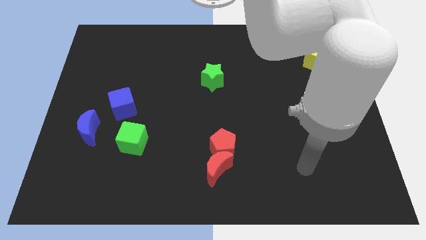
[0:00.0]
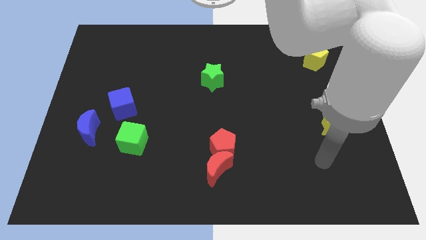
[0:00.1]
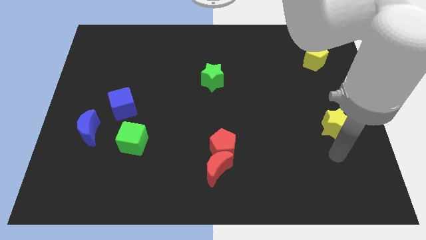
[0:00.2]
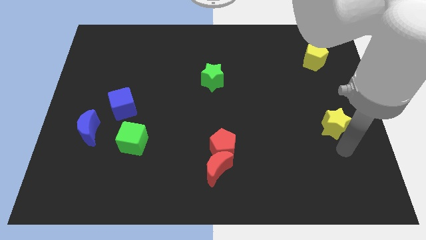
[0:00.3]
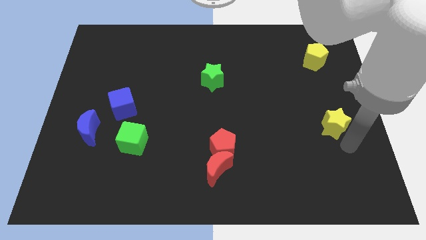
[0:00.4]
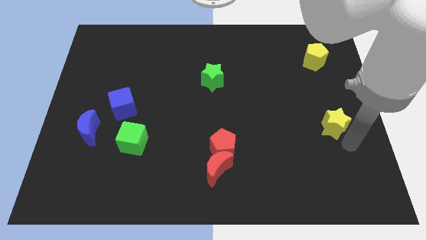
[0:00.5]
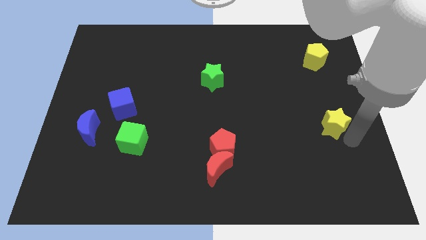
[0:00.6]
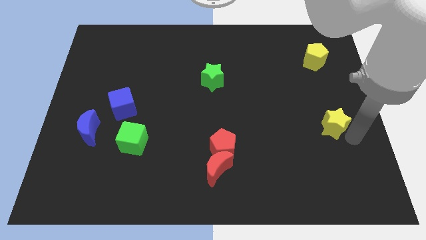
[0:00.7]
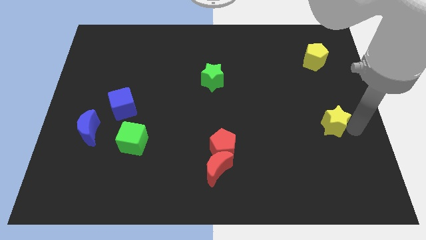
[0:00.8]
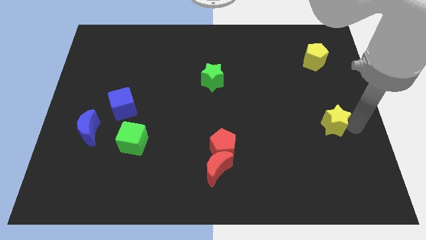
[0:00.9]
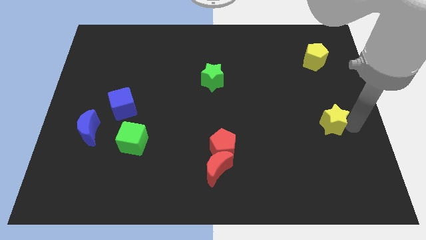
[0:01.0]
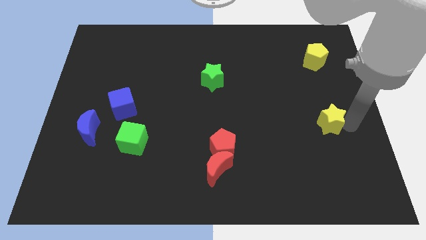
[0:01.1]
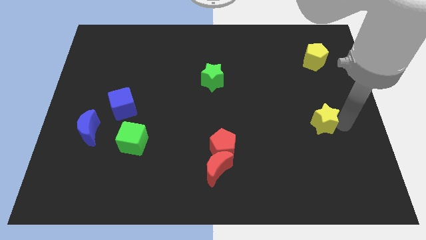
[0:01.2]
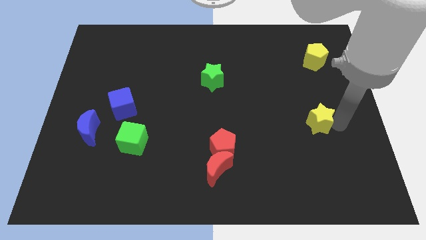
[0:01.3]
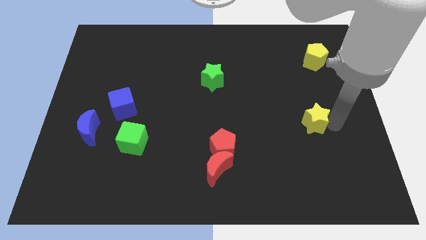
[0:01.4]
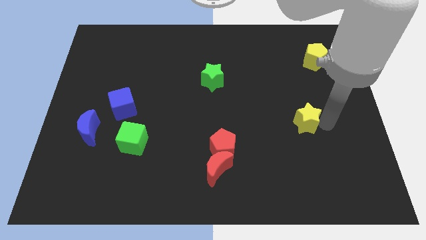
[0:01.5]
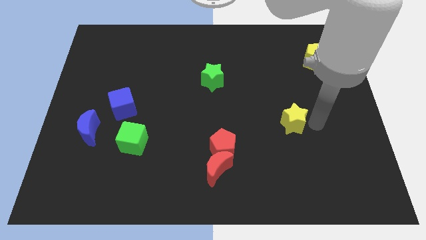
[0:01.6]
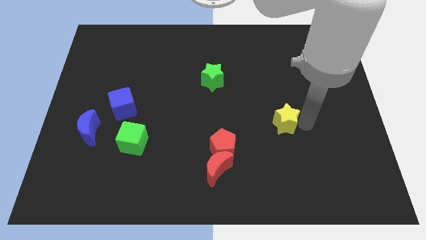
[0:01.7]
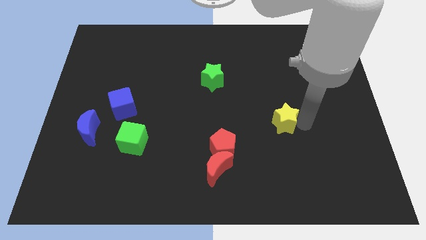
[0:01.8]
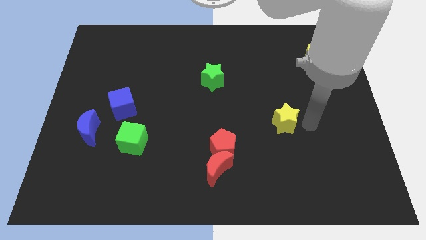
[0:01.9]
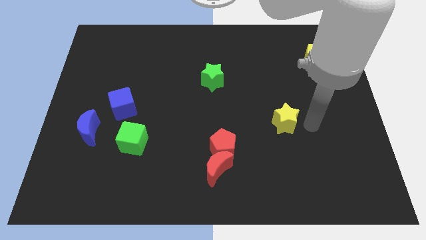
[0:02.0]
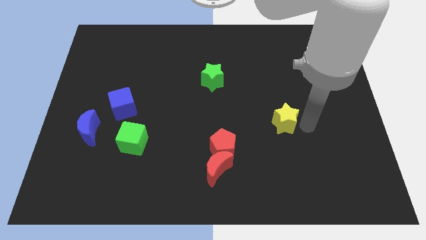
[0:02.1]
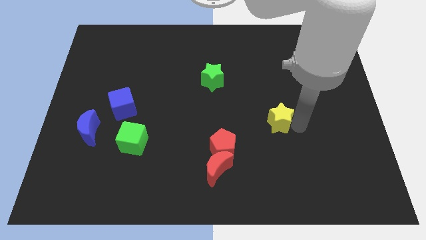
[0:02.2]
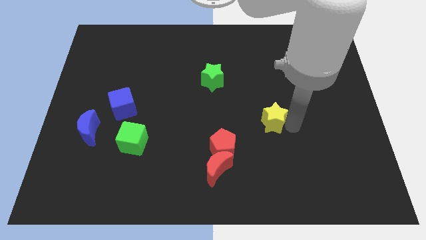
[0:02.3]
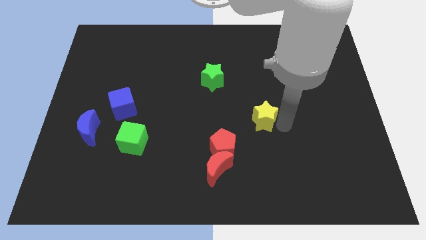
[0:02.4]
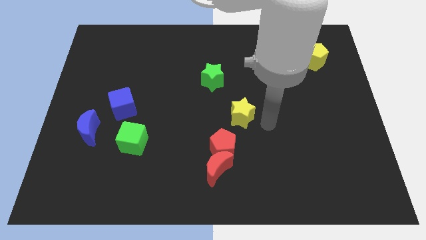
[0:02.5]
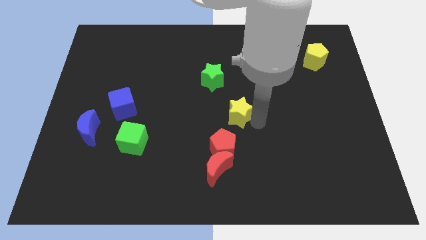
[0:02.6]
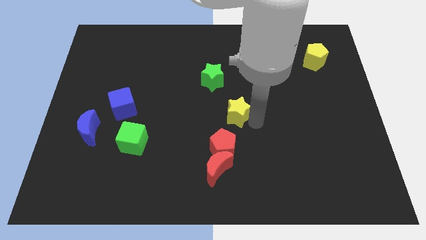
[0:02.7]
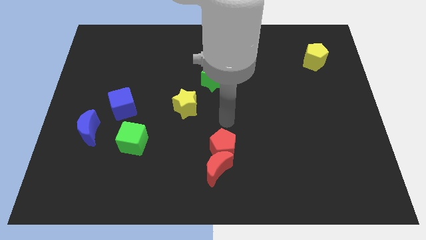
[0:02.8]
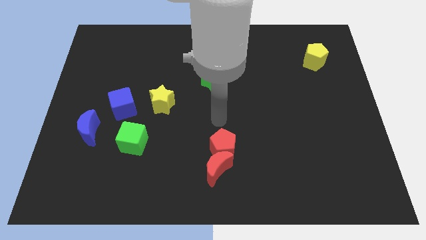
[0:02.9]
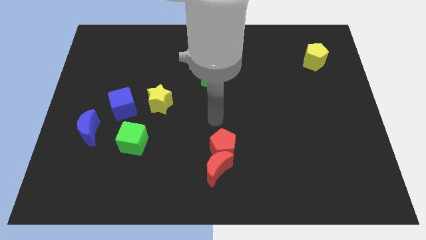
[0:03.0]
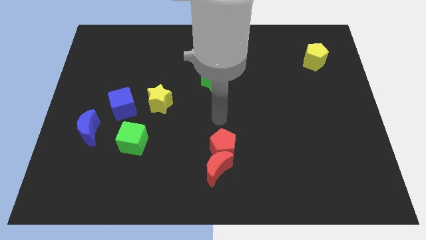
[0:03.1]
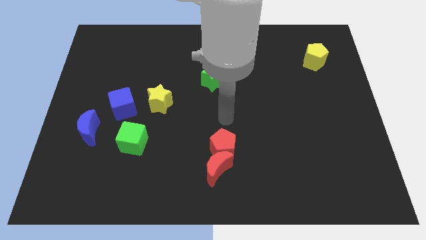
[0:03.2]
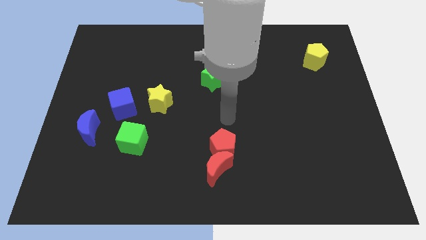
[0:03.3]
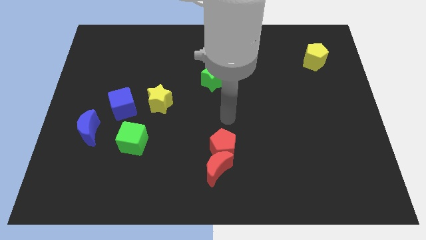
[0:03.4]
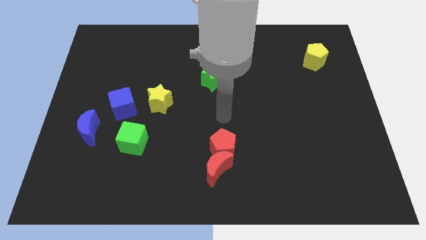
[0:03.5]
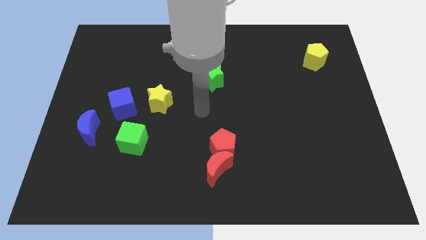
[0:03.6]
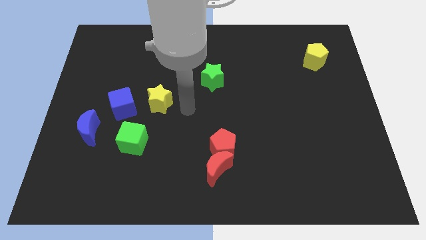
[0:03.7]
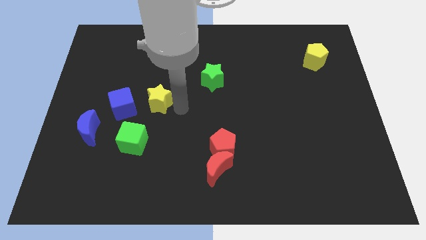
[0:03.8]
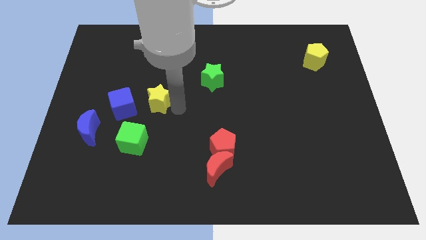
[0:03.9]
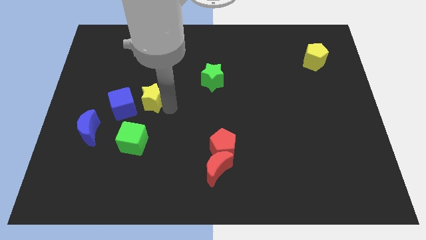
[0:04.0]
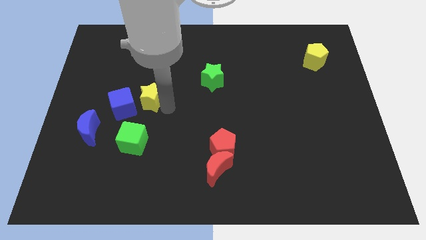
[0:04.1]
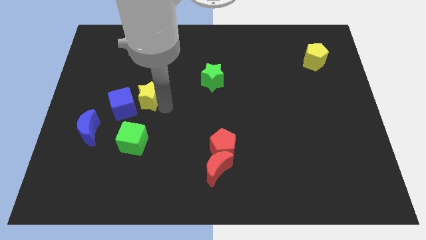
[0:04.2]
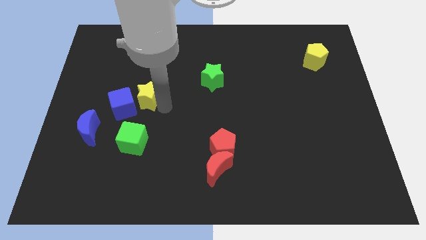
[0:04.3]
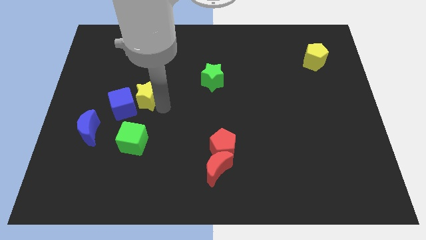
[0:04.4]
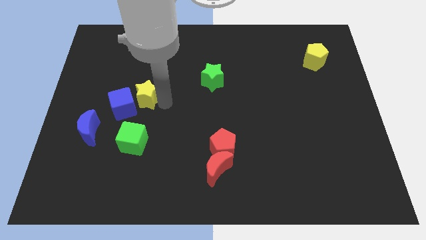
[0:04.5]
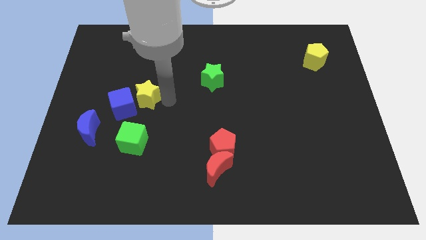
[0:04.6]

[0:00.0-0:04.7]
move the yellow star towards the blue cube

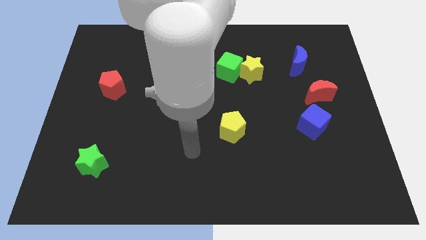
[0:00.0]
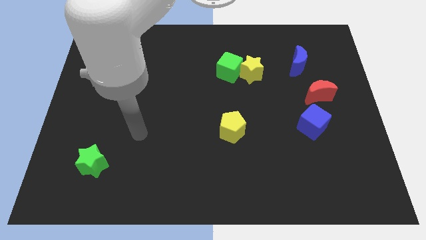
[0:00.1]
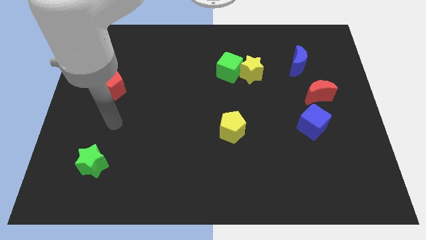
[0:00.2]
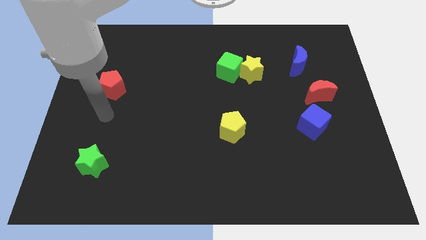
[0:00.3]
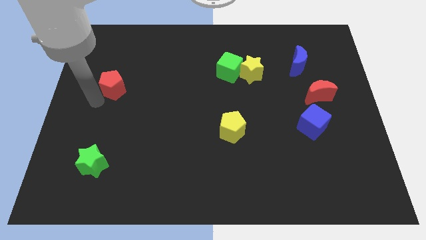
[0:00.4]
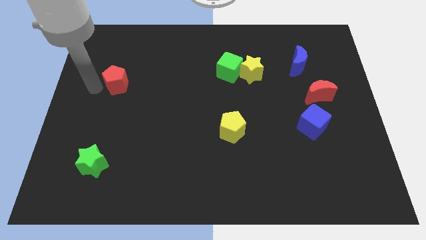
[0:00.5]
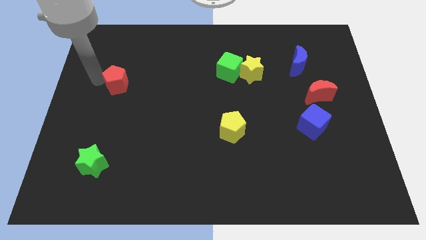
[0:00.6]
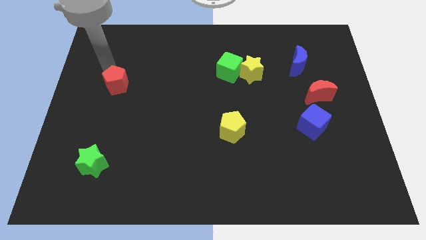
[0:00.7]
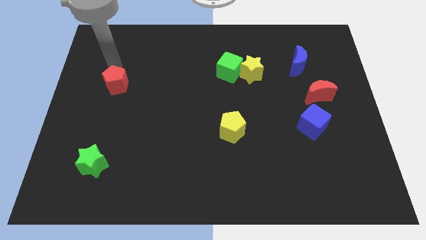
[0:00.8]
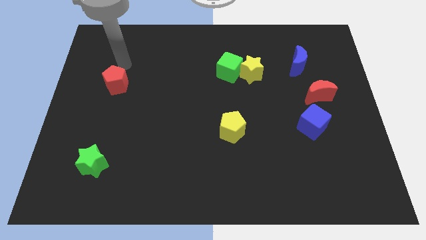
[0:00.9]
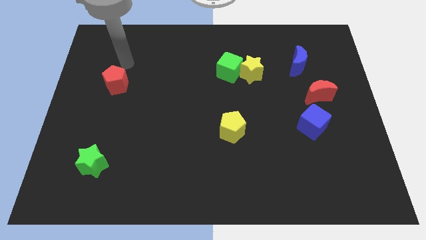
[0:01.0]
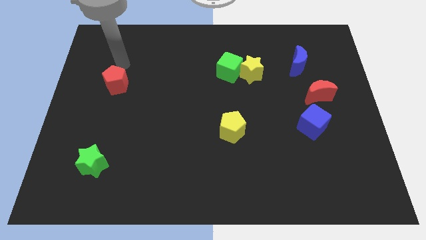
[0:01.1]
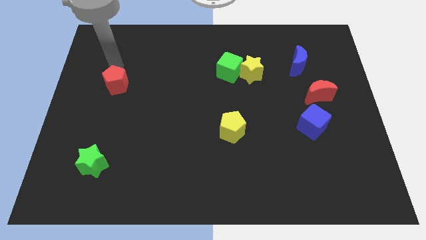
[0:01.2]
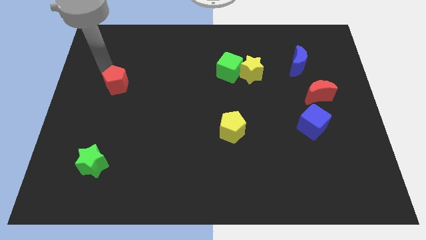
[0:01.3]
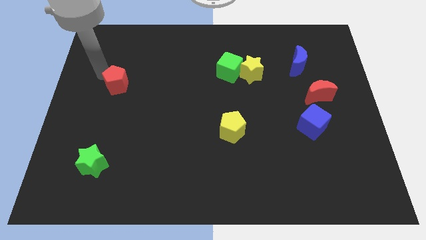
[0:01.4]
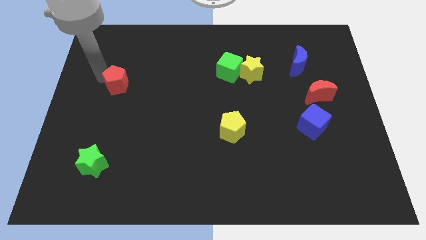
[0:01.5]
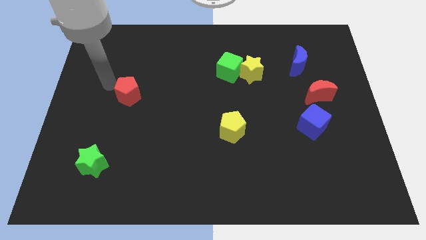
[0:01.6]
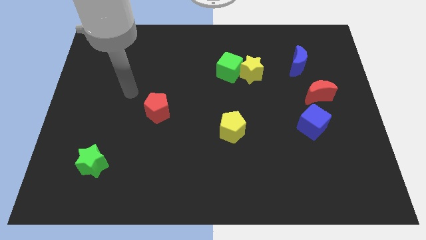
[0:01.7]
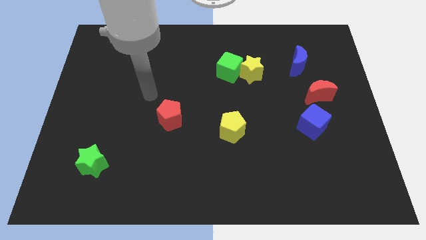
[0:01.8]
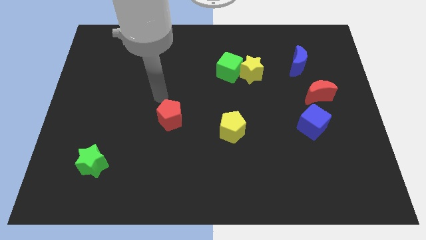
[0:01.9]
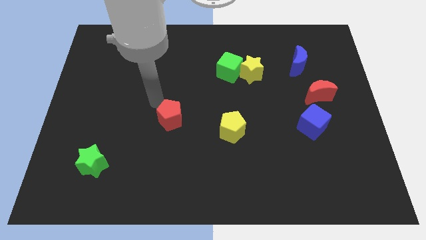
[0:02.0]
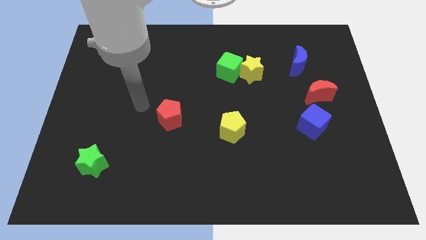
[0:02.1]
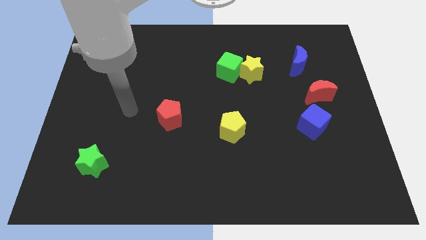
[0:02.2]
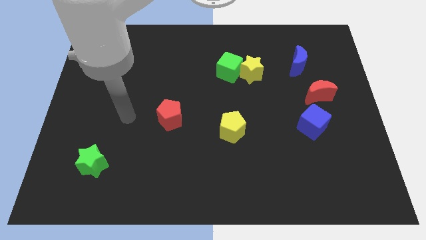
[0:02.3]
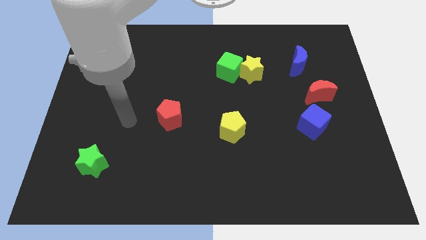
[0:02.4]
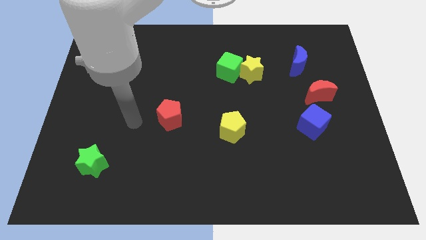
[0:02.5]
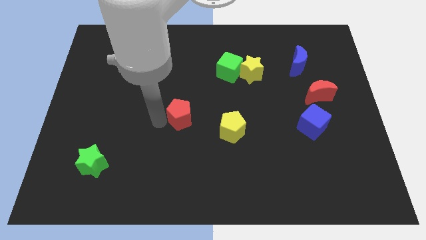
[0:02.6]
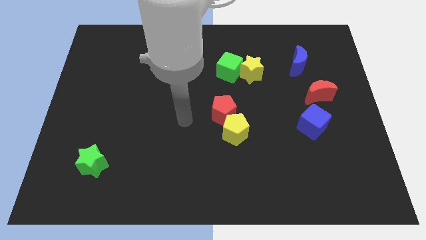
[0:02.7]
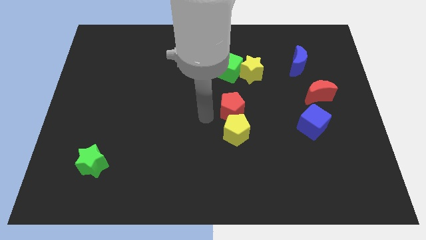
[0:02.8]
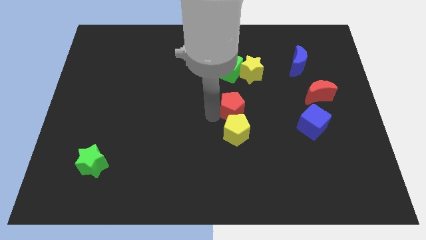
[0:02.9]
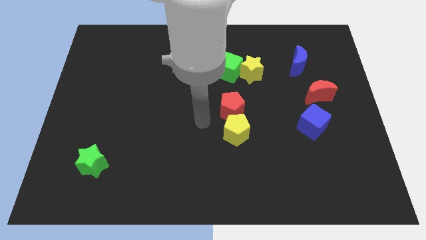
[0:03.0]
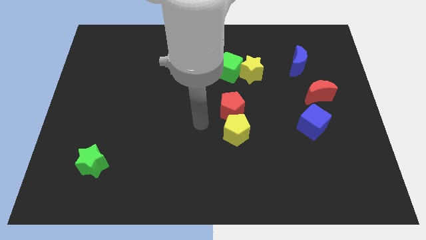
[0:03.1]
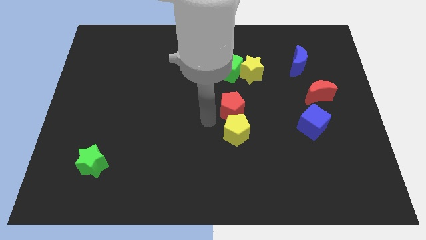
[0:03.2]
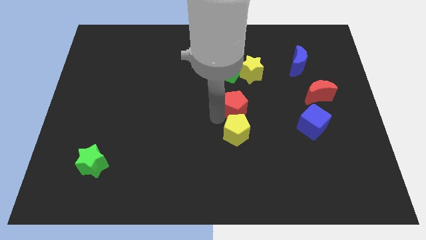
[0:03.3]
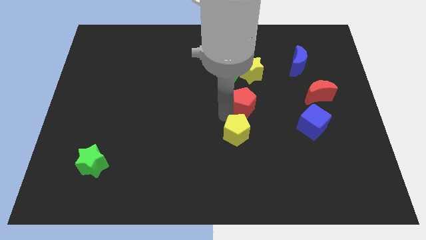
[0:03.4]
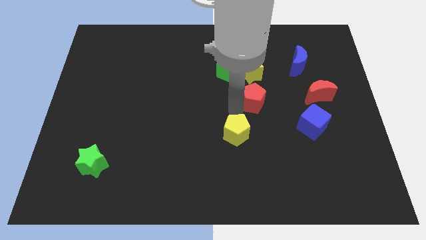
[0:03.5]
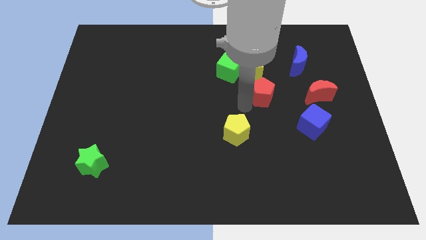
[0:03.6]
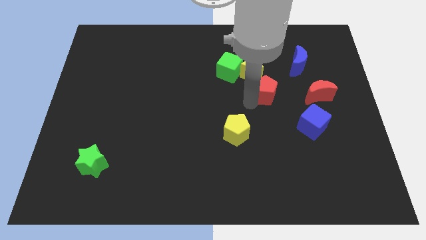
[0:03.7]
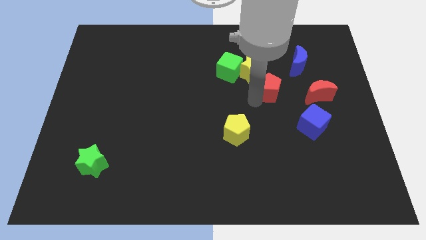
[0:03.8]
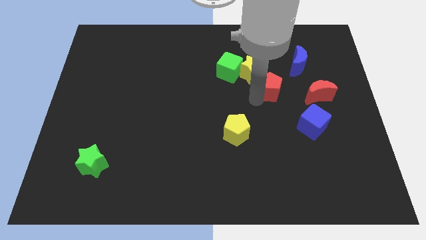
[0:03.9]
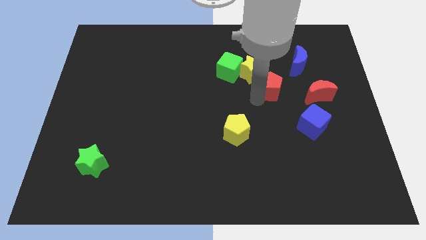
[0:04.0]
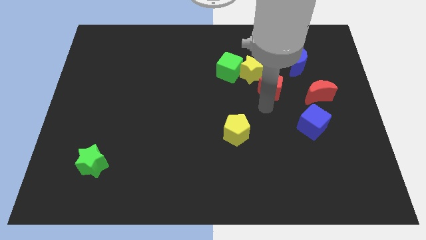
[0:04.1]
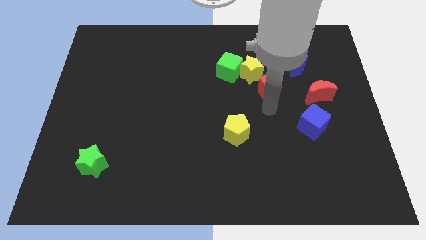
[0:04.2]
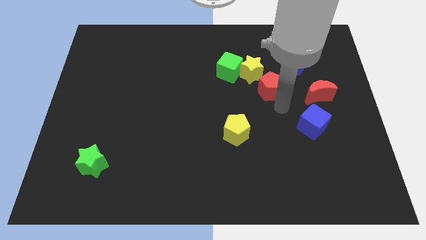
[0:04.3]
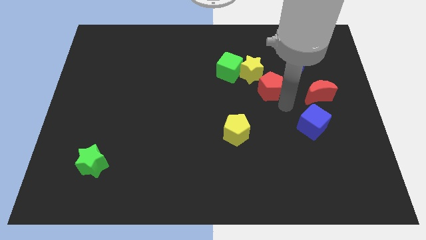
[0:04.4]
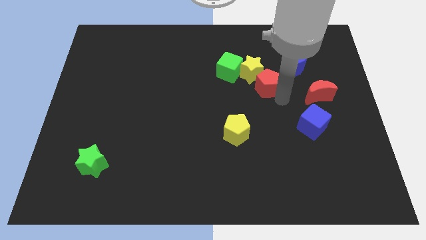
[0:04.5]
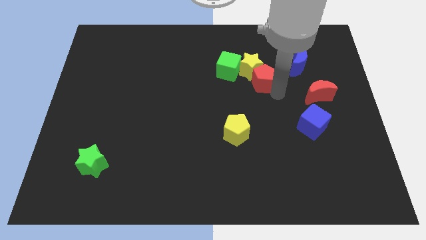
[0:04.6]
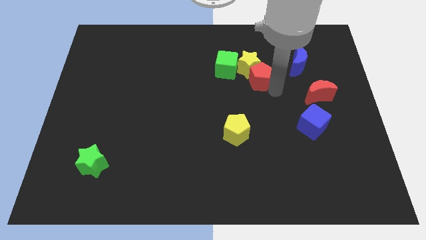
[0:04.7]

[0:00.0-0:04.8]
push the red pentagon to the yellow star
